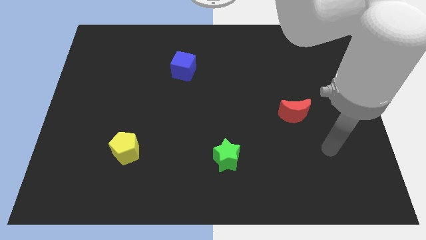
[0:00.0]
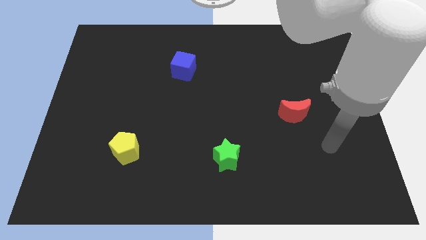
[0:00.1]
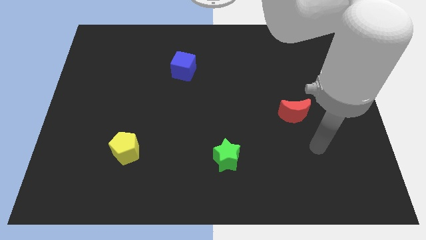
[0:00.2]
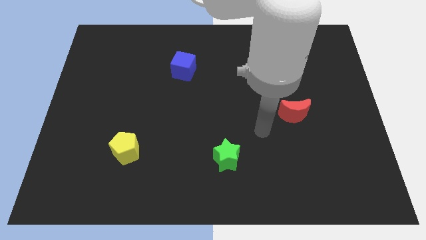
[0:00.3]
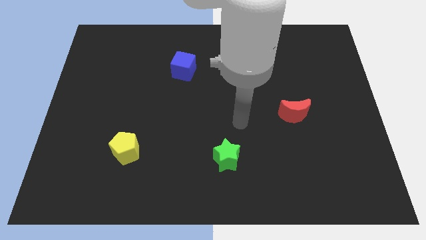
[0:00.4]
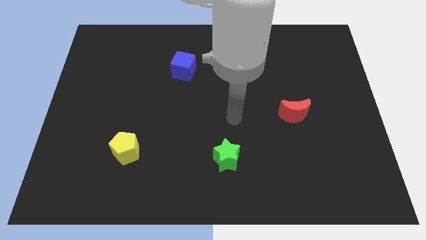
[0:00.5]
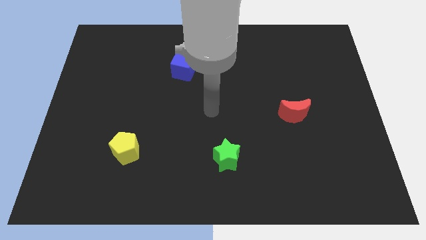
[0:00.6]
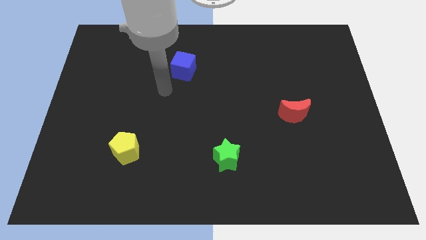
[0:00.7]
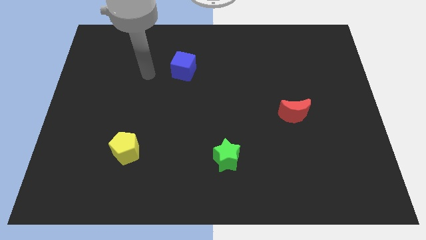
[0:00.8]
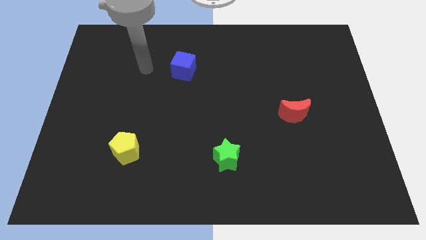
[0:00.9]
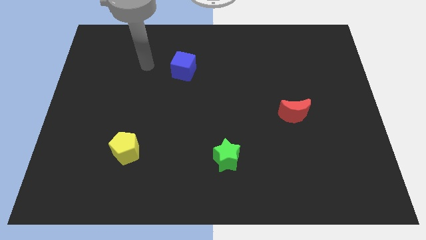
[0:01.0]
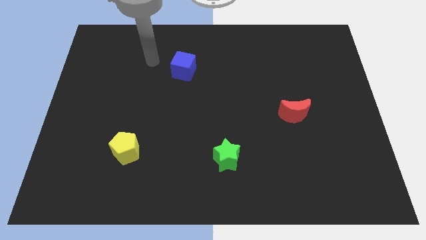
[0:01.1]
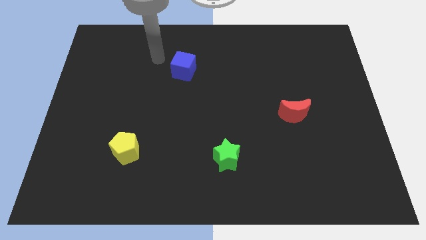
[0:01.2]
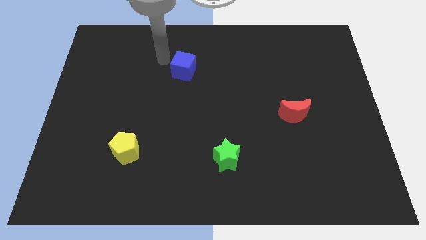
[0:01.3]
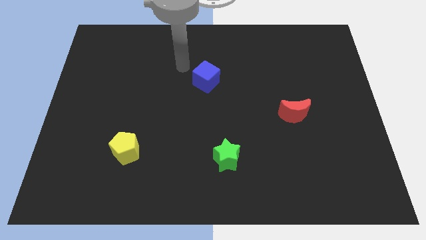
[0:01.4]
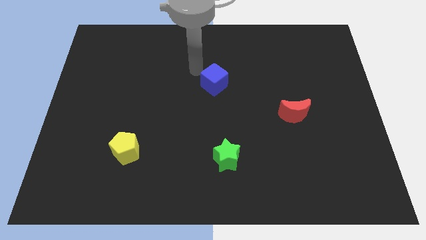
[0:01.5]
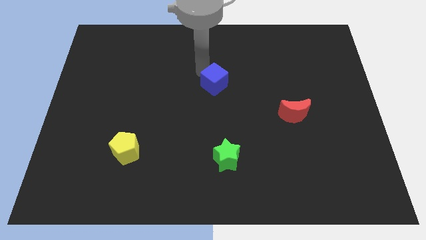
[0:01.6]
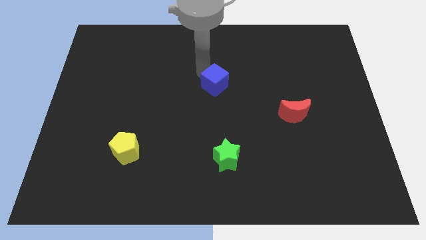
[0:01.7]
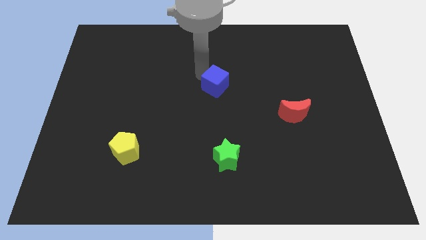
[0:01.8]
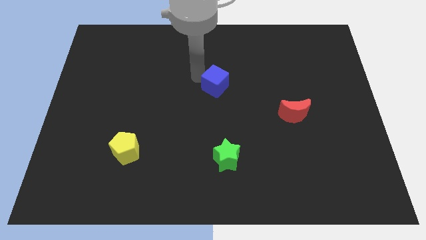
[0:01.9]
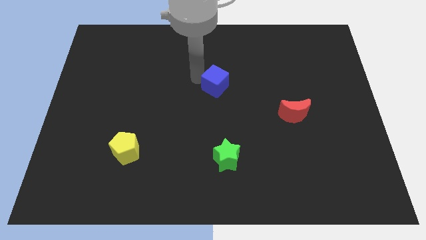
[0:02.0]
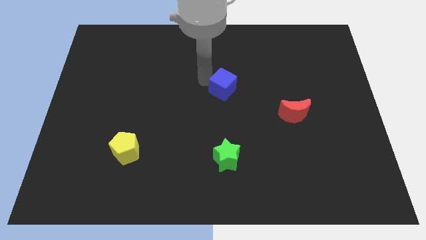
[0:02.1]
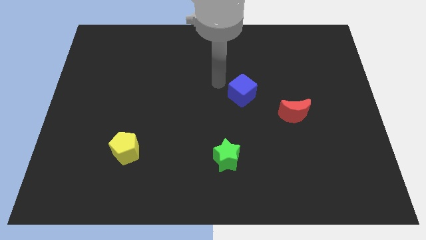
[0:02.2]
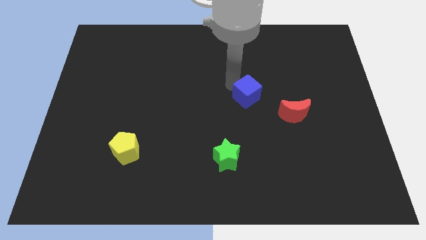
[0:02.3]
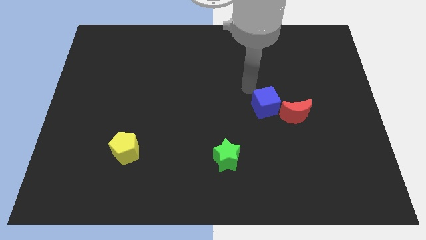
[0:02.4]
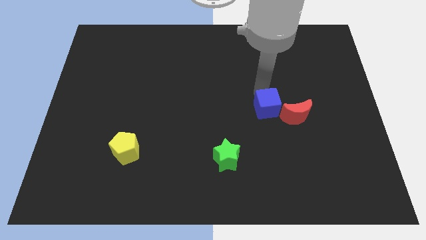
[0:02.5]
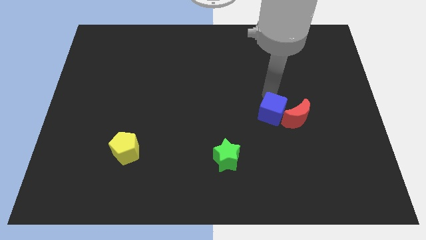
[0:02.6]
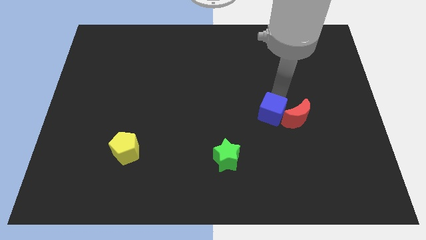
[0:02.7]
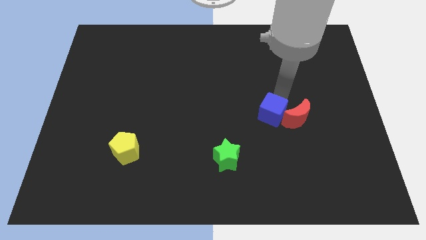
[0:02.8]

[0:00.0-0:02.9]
move the blue cube to the red block

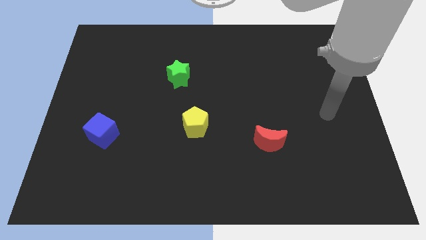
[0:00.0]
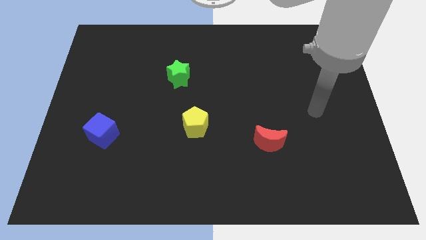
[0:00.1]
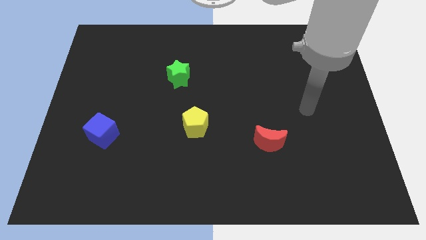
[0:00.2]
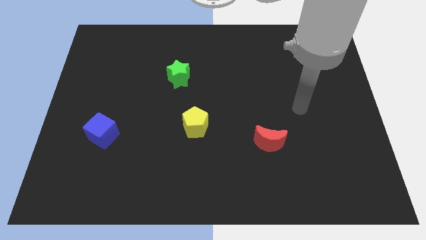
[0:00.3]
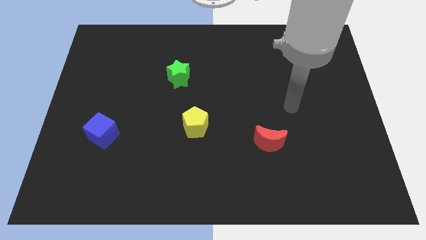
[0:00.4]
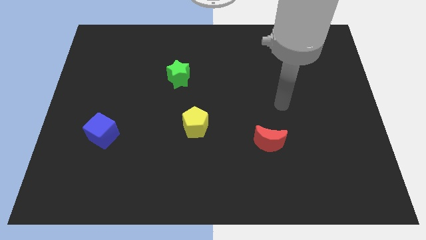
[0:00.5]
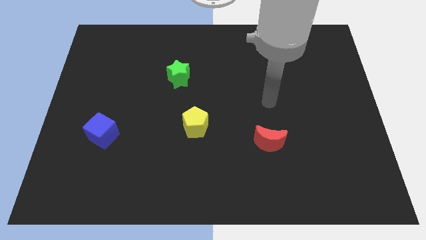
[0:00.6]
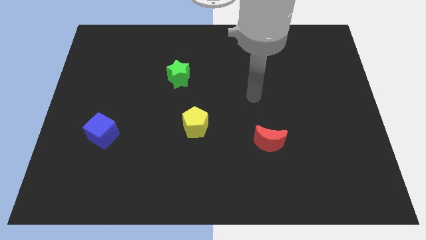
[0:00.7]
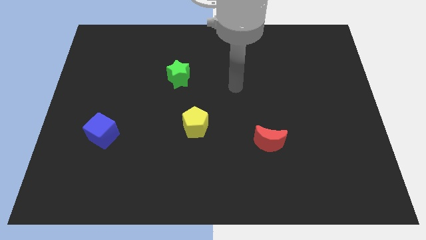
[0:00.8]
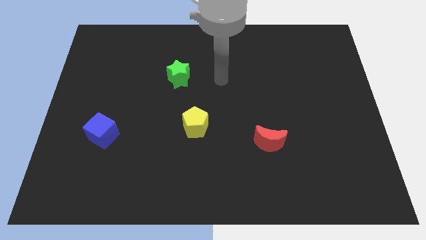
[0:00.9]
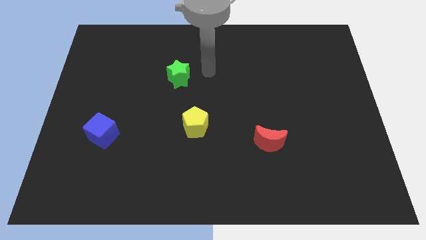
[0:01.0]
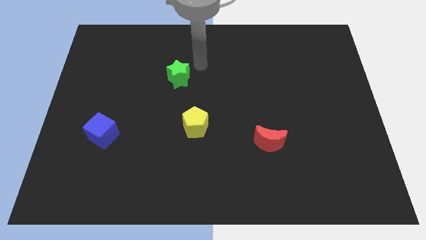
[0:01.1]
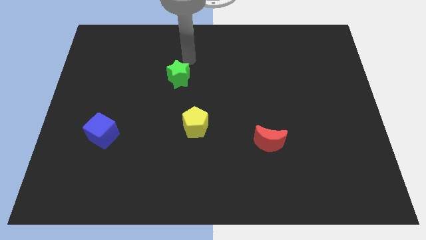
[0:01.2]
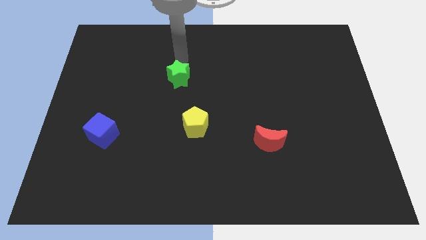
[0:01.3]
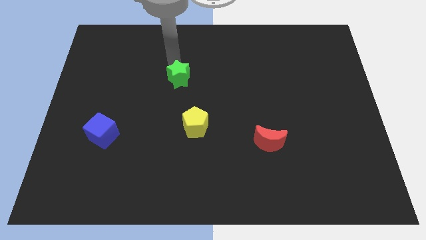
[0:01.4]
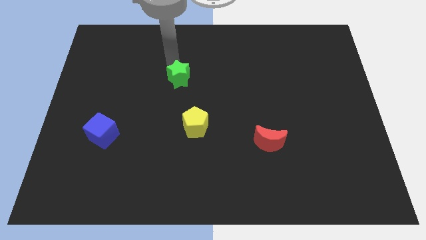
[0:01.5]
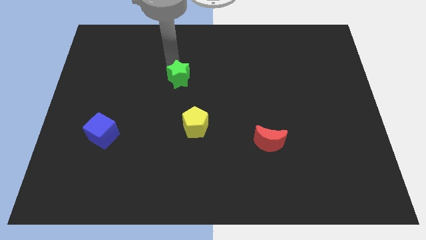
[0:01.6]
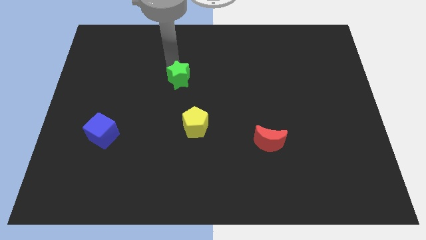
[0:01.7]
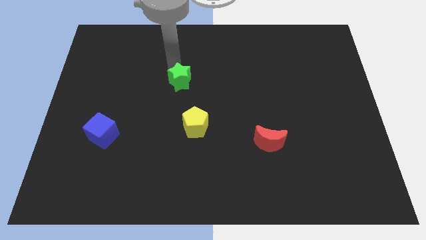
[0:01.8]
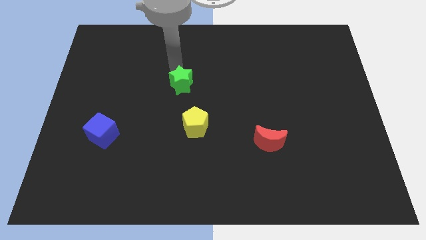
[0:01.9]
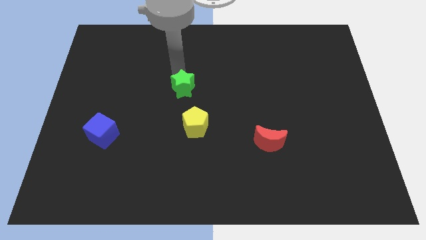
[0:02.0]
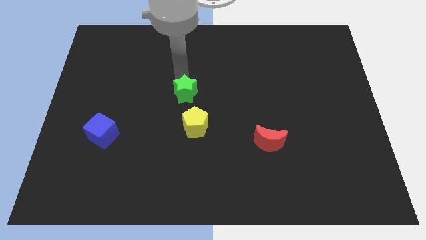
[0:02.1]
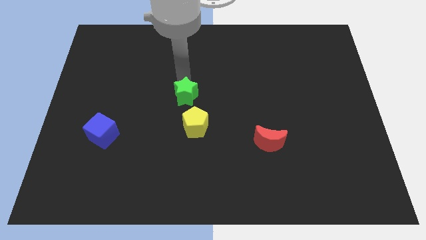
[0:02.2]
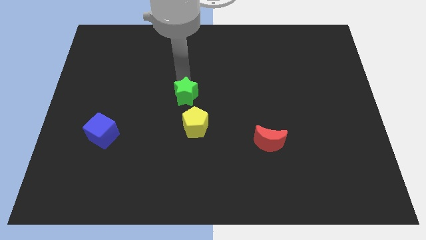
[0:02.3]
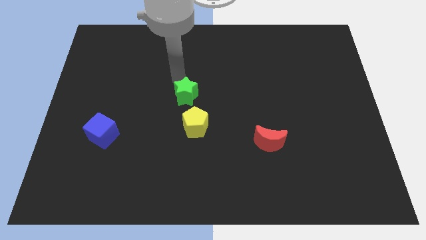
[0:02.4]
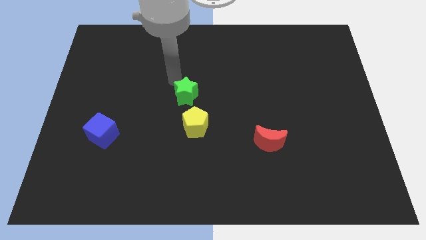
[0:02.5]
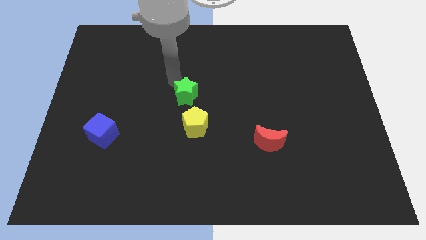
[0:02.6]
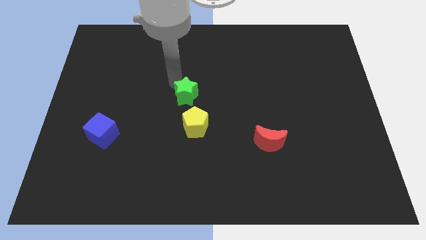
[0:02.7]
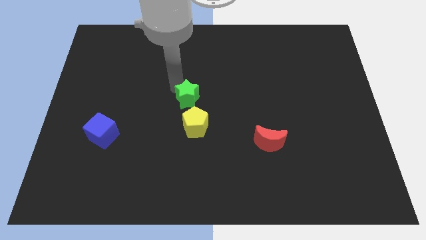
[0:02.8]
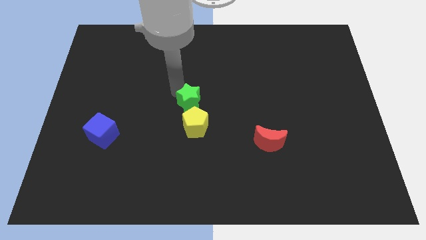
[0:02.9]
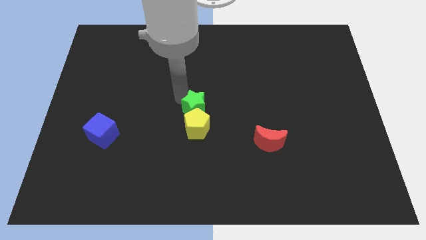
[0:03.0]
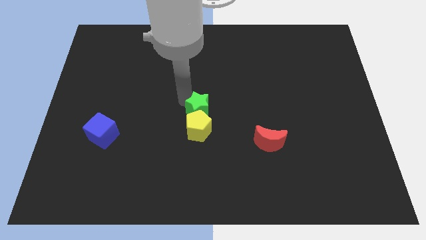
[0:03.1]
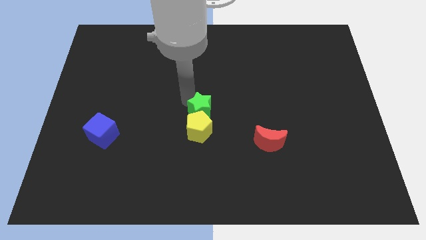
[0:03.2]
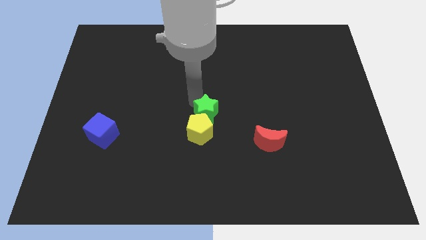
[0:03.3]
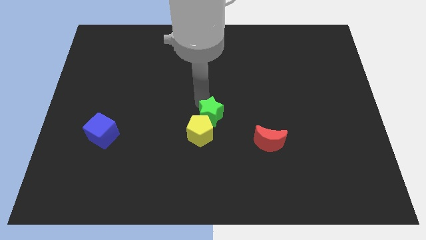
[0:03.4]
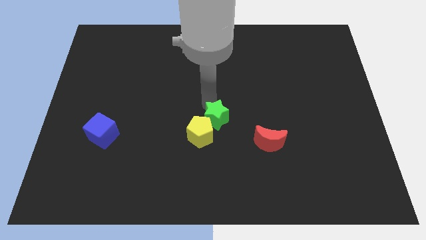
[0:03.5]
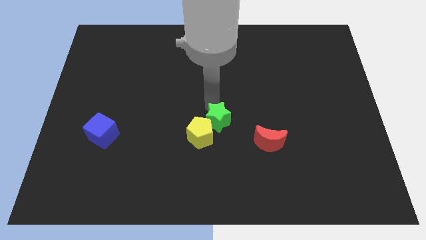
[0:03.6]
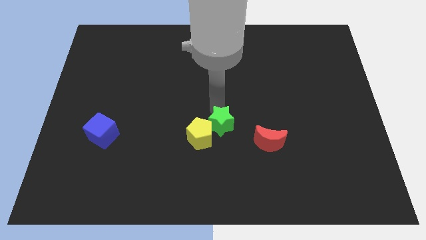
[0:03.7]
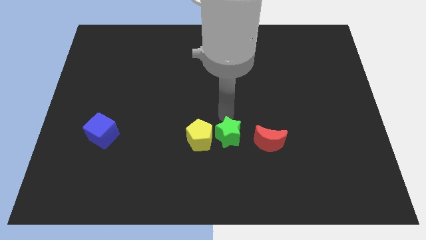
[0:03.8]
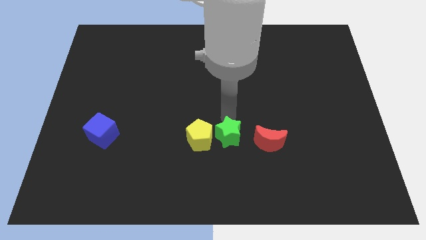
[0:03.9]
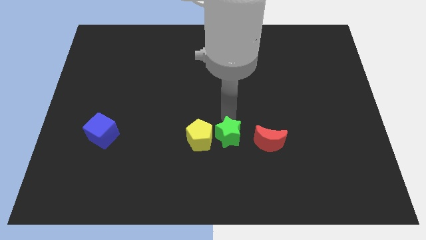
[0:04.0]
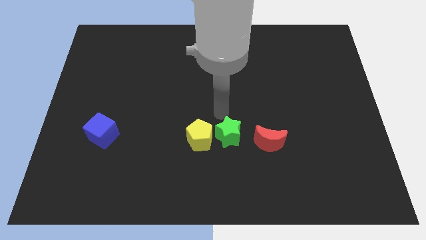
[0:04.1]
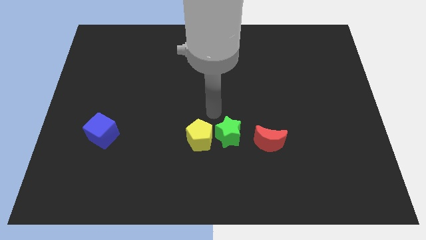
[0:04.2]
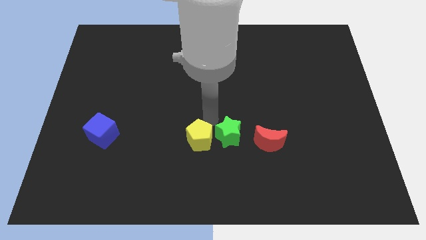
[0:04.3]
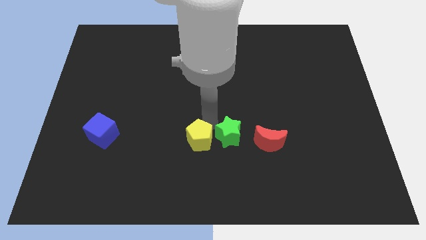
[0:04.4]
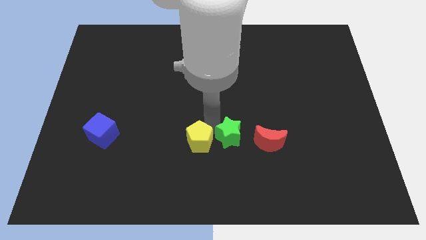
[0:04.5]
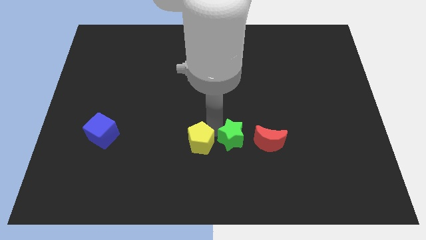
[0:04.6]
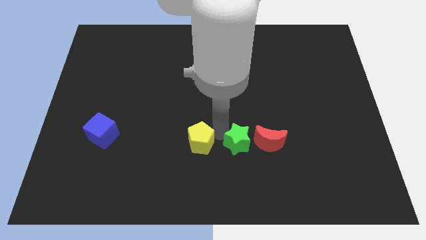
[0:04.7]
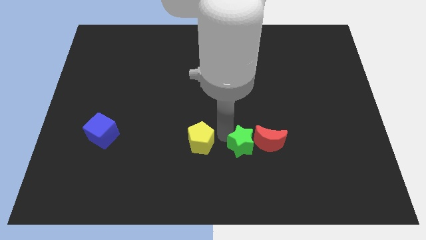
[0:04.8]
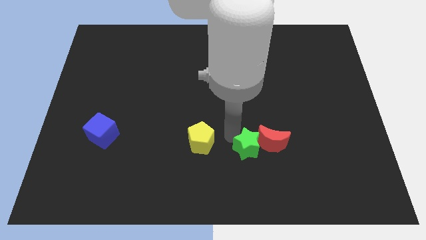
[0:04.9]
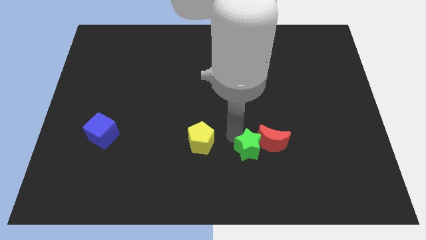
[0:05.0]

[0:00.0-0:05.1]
move the star close to the red block

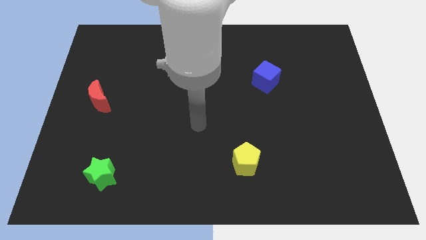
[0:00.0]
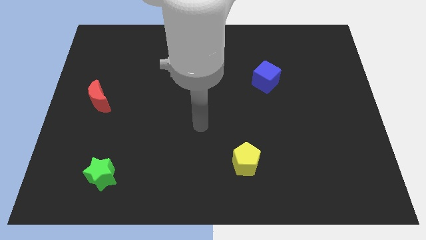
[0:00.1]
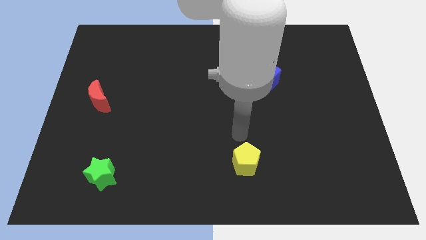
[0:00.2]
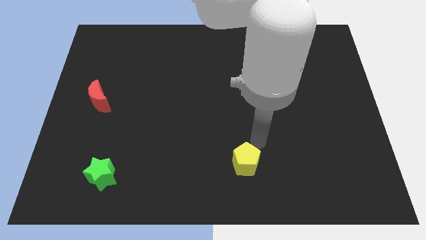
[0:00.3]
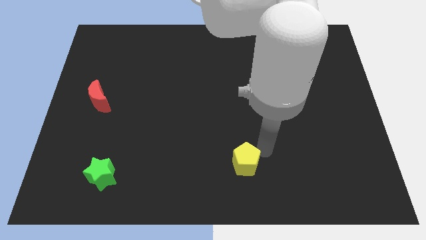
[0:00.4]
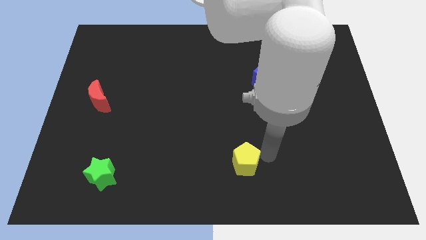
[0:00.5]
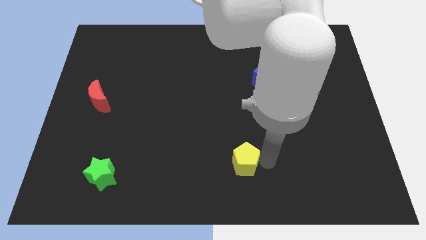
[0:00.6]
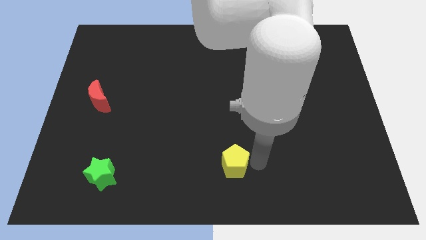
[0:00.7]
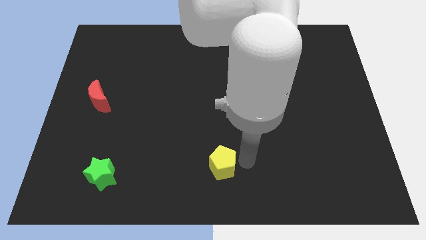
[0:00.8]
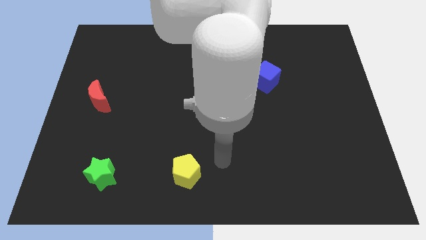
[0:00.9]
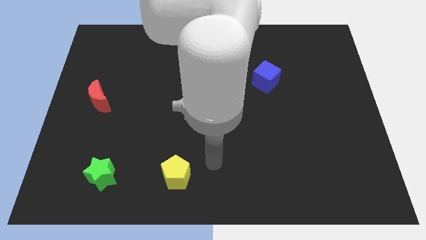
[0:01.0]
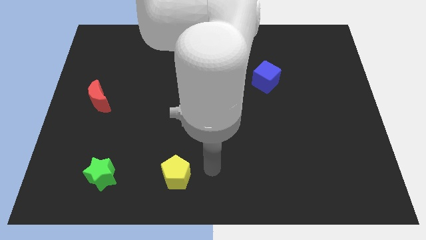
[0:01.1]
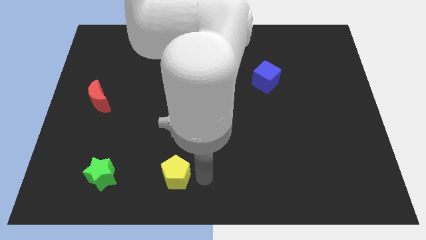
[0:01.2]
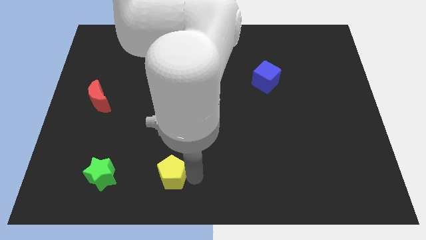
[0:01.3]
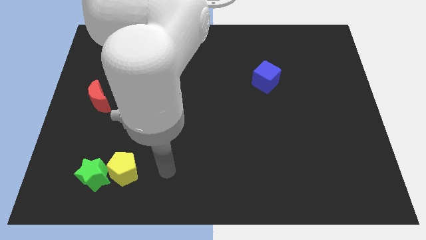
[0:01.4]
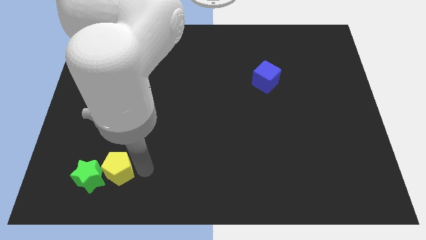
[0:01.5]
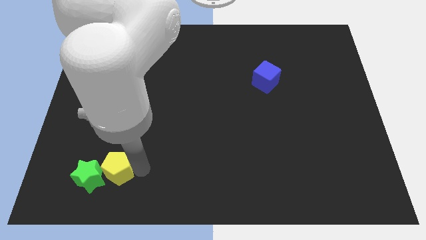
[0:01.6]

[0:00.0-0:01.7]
put the pentagon towards the green block
